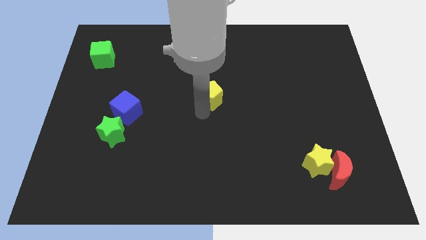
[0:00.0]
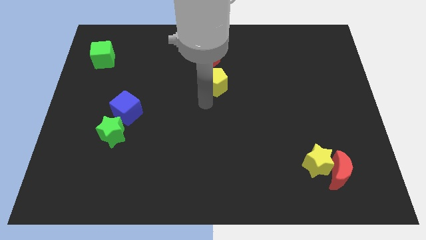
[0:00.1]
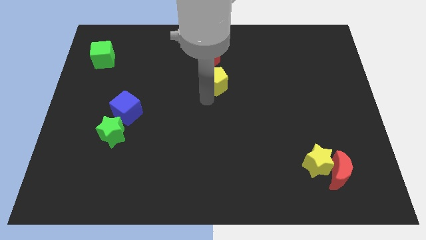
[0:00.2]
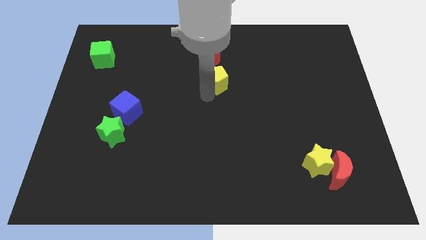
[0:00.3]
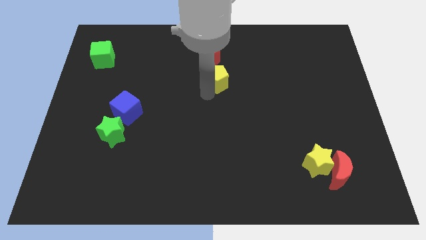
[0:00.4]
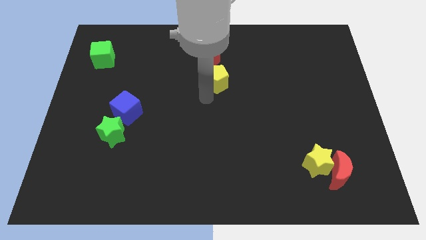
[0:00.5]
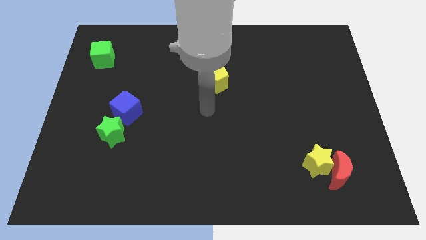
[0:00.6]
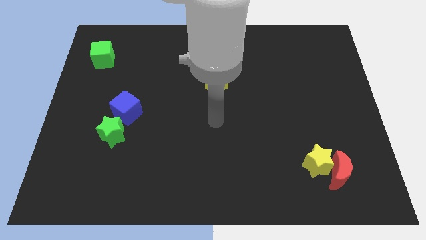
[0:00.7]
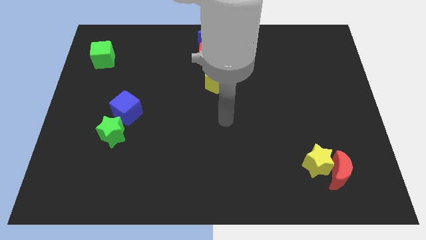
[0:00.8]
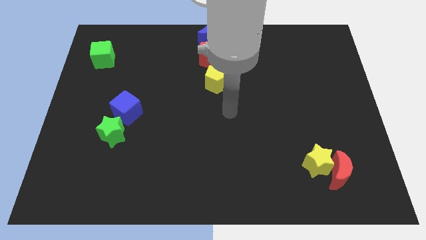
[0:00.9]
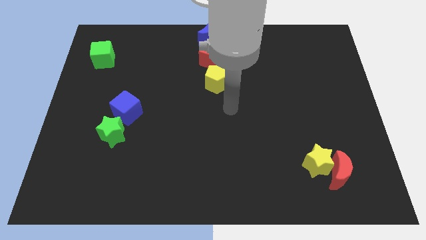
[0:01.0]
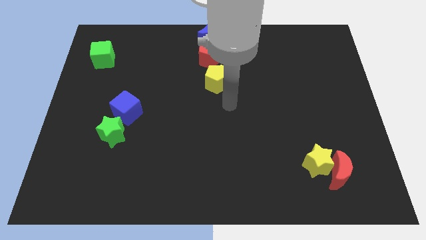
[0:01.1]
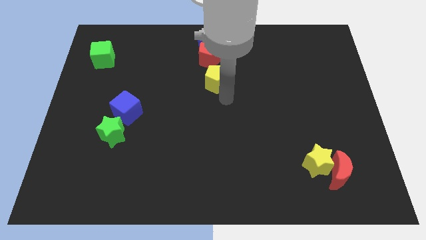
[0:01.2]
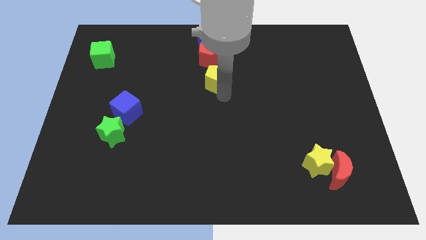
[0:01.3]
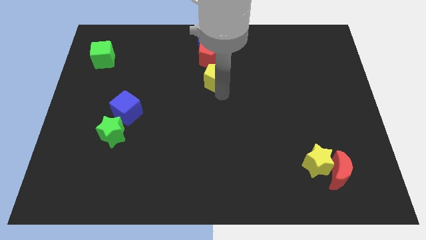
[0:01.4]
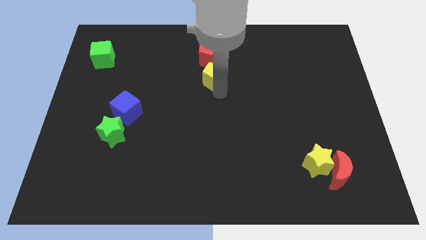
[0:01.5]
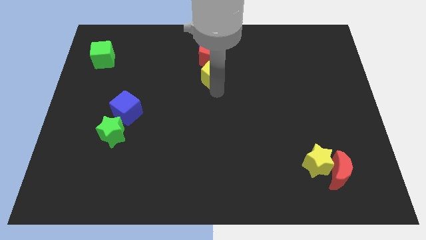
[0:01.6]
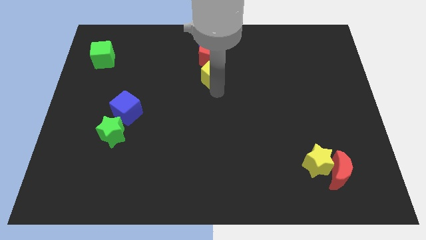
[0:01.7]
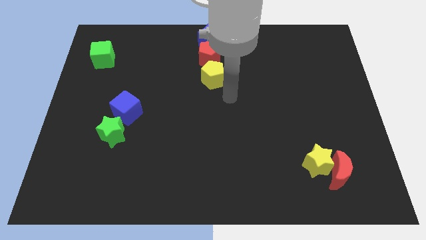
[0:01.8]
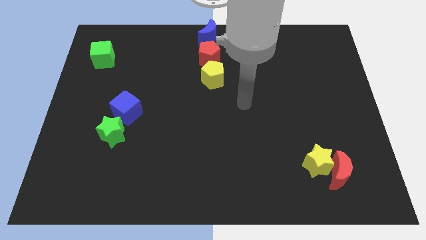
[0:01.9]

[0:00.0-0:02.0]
move the yellow pentagon below the red pentagon

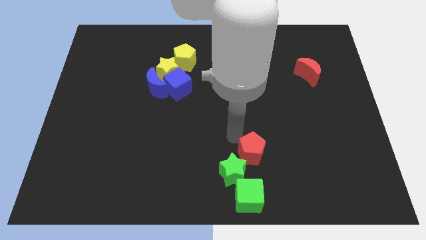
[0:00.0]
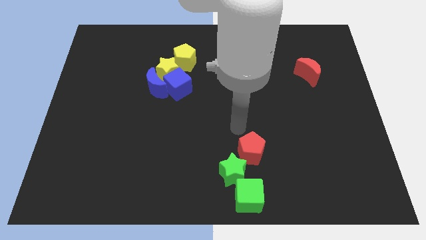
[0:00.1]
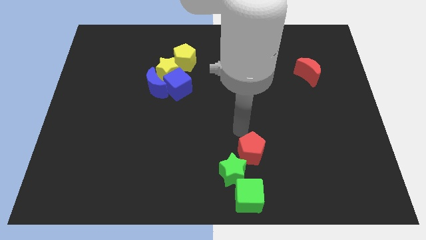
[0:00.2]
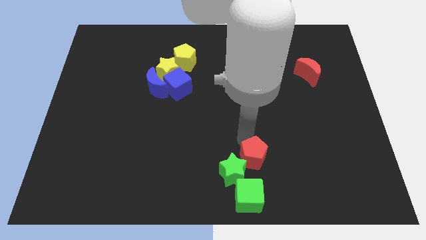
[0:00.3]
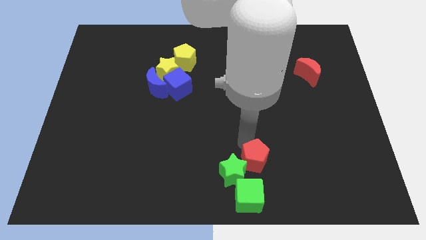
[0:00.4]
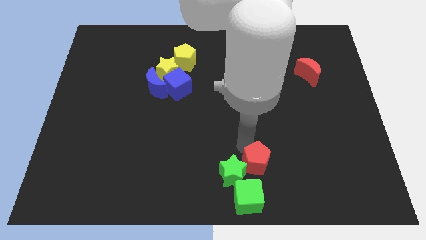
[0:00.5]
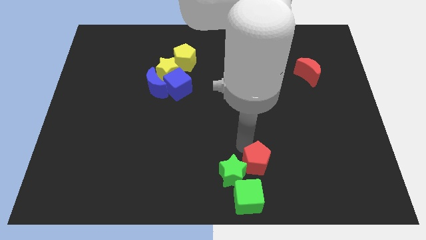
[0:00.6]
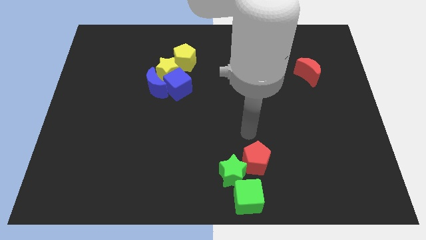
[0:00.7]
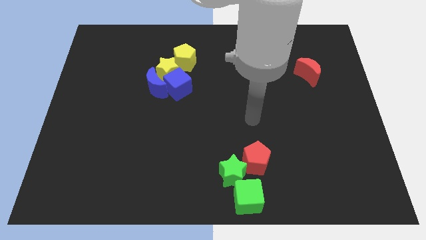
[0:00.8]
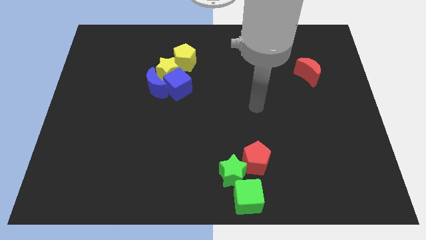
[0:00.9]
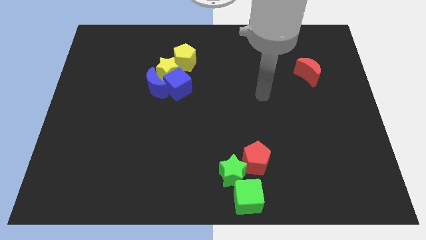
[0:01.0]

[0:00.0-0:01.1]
push the red pentagon into green star

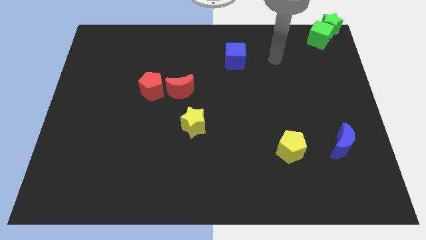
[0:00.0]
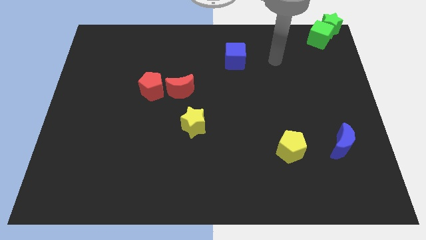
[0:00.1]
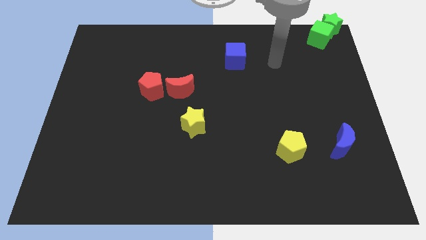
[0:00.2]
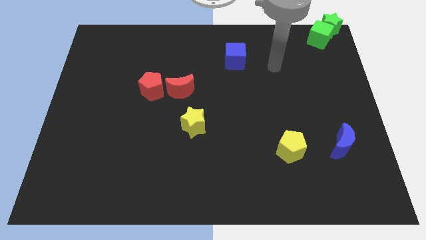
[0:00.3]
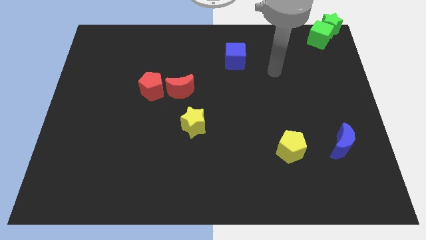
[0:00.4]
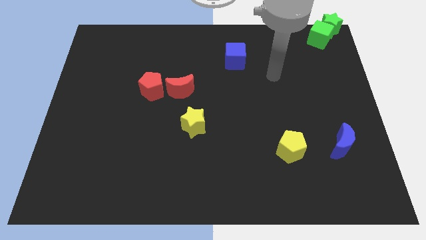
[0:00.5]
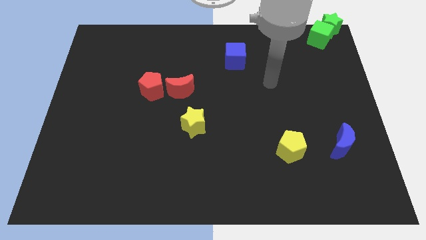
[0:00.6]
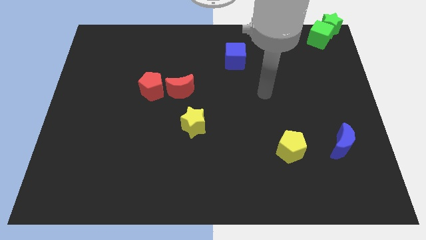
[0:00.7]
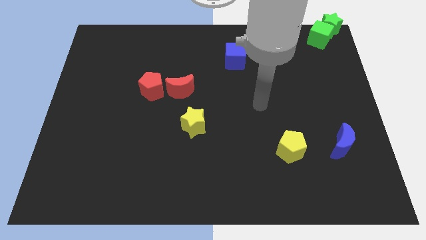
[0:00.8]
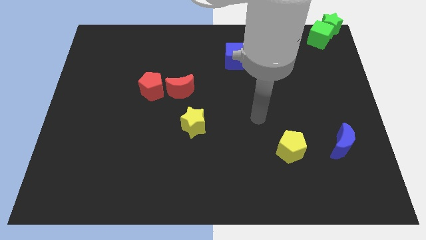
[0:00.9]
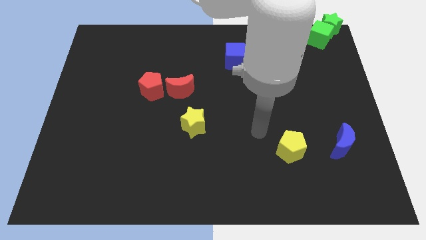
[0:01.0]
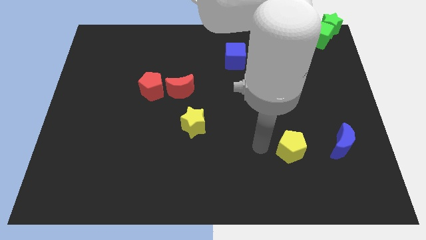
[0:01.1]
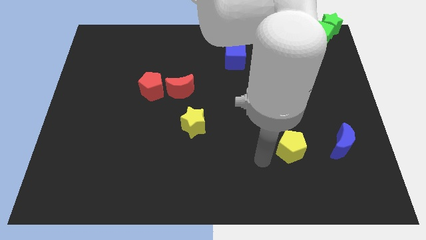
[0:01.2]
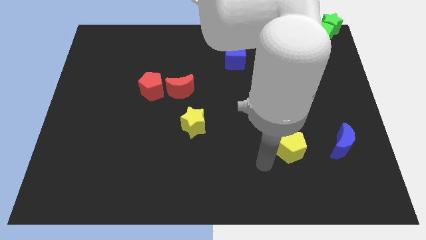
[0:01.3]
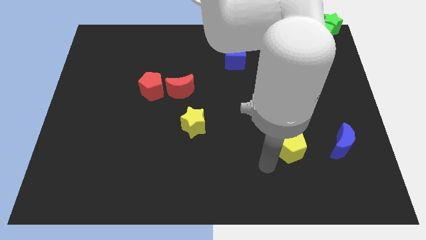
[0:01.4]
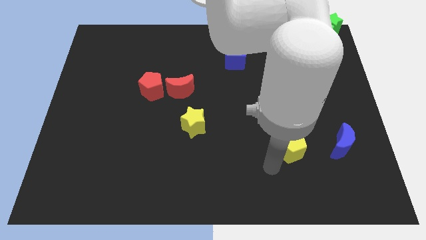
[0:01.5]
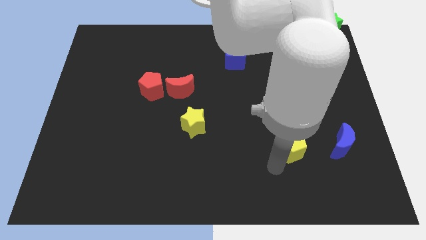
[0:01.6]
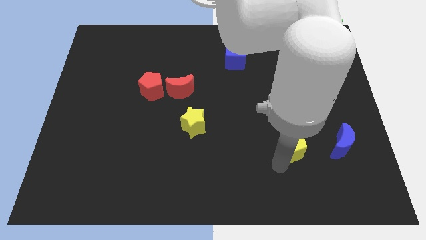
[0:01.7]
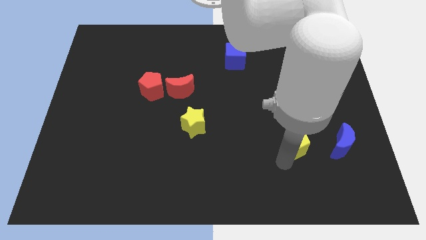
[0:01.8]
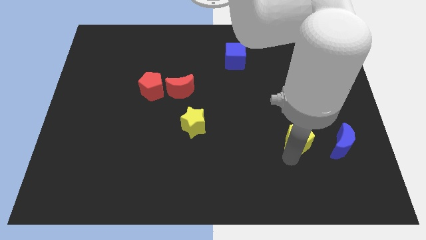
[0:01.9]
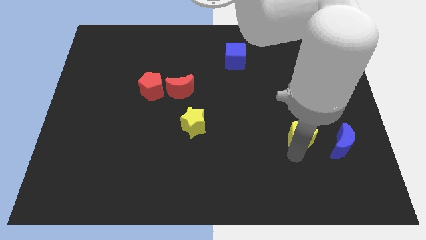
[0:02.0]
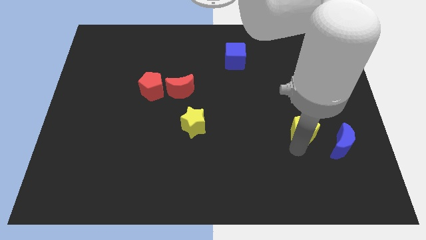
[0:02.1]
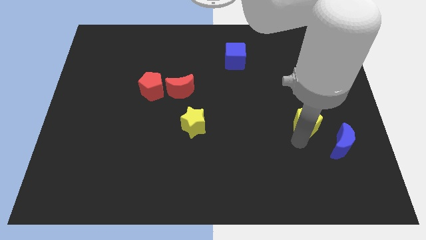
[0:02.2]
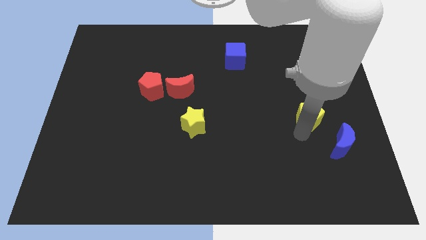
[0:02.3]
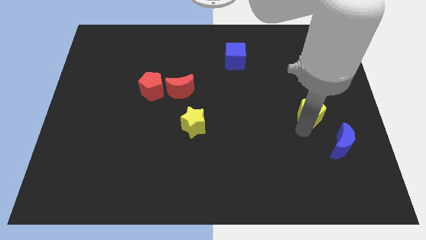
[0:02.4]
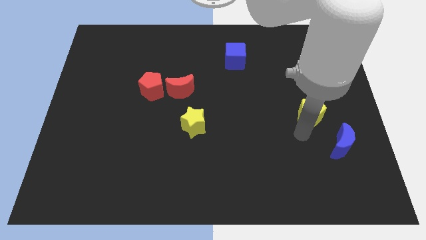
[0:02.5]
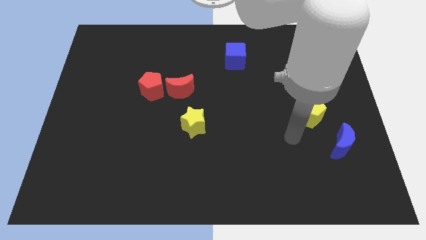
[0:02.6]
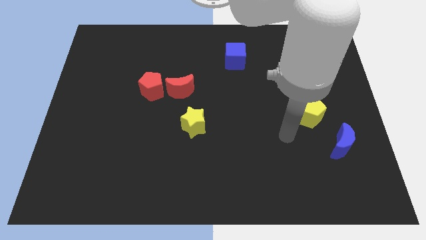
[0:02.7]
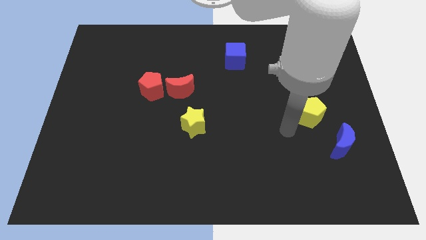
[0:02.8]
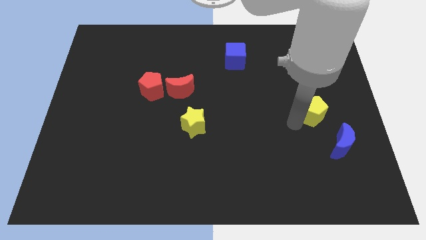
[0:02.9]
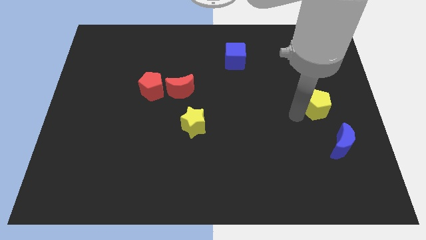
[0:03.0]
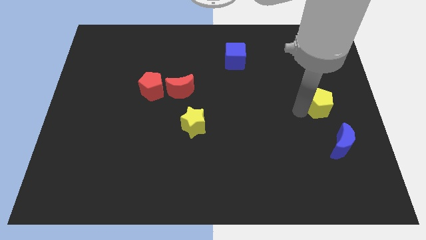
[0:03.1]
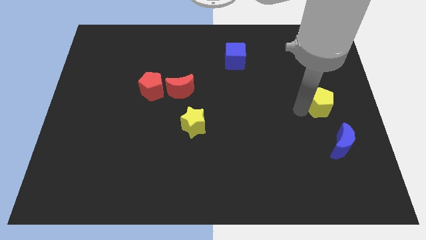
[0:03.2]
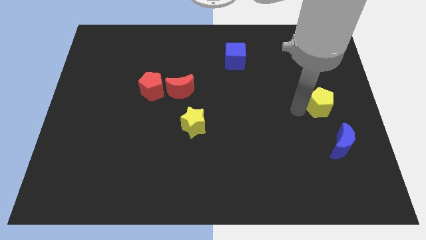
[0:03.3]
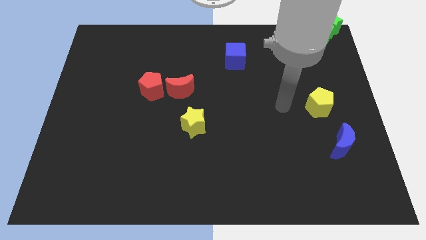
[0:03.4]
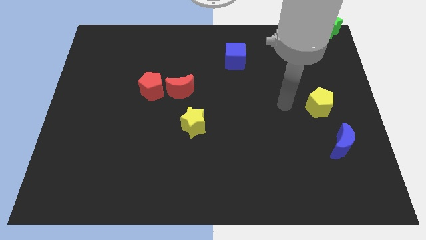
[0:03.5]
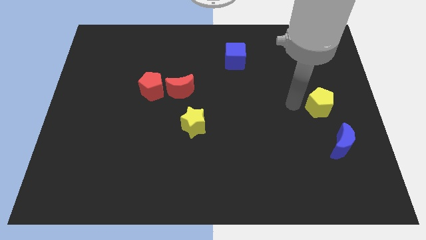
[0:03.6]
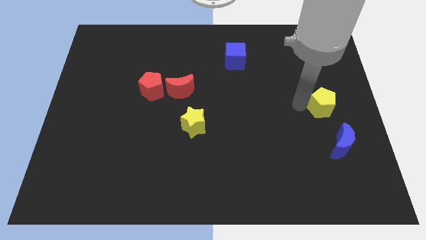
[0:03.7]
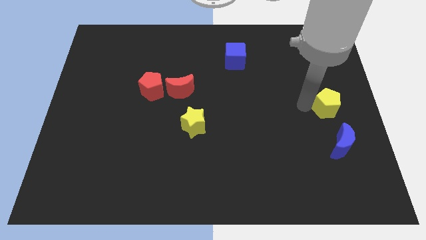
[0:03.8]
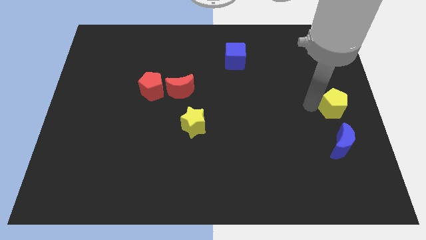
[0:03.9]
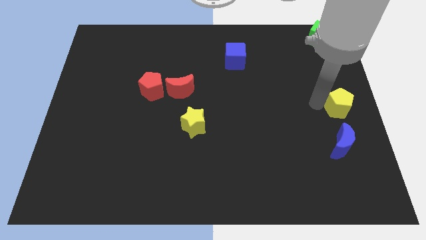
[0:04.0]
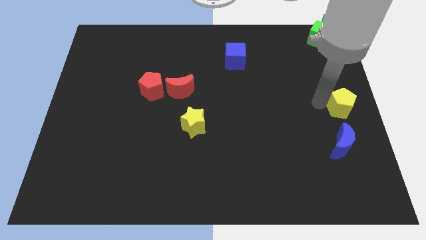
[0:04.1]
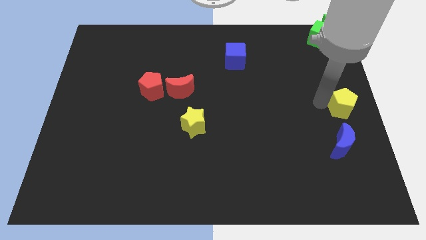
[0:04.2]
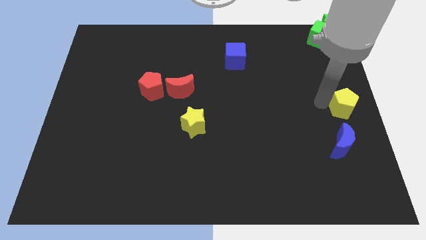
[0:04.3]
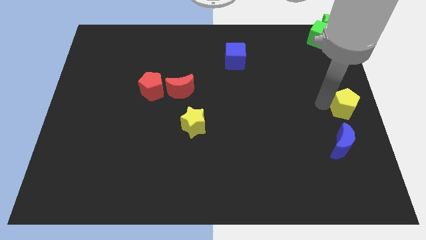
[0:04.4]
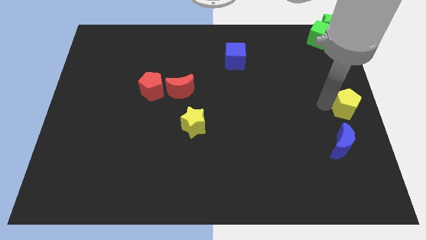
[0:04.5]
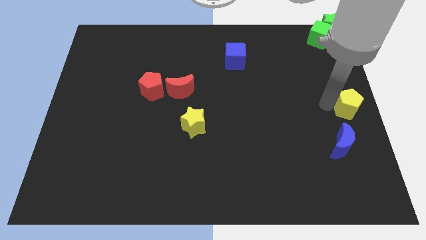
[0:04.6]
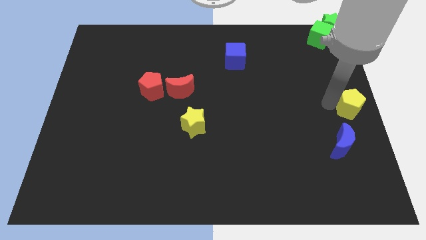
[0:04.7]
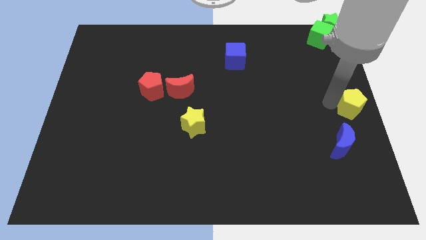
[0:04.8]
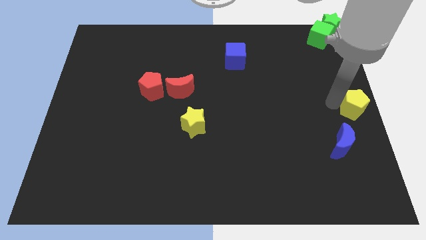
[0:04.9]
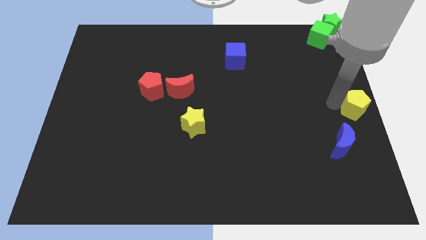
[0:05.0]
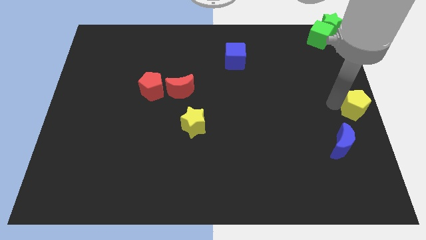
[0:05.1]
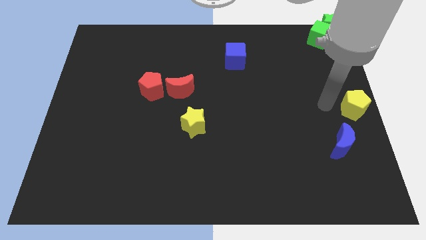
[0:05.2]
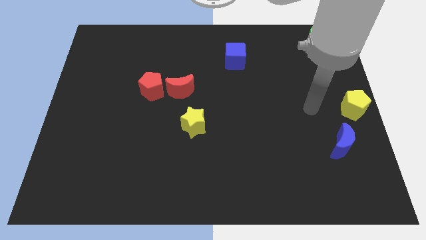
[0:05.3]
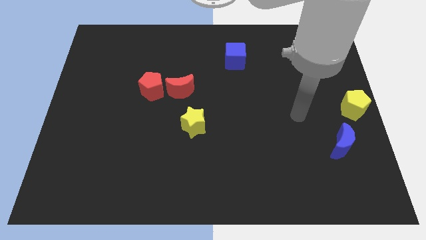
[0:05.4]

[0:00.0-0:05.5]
move the yellow pentagon to the right center

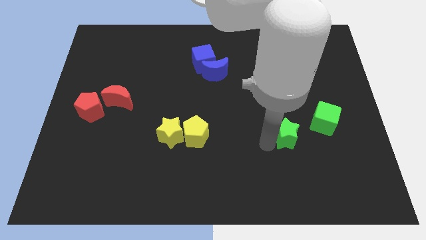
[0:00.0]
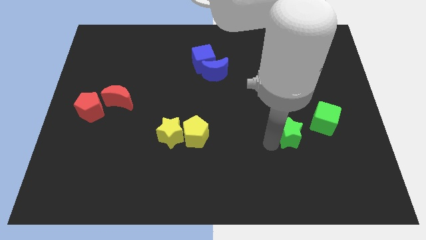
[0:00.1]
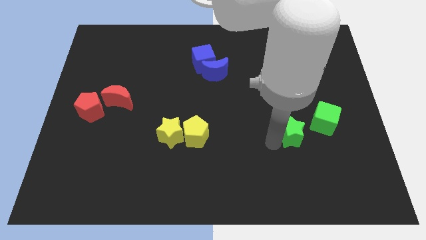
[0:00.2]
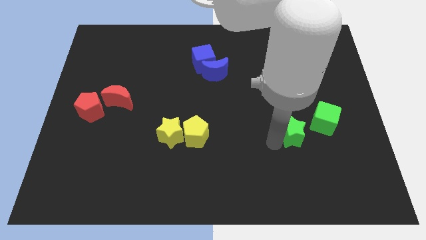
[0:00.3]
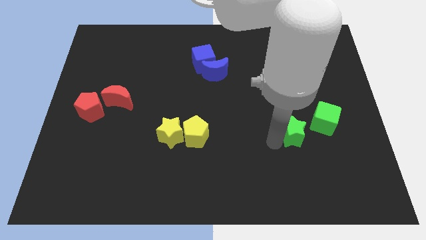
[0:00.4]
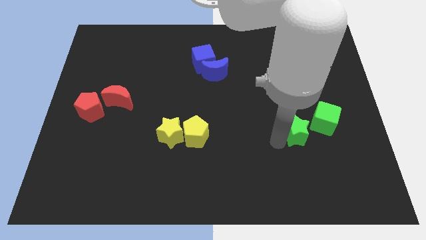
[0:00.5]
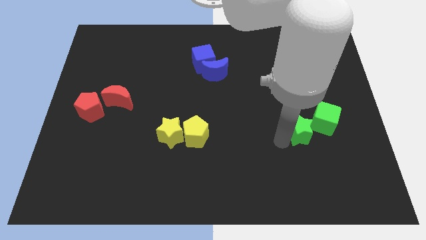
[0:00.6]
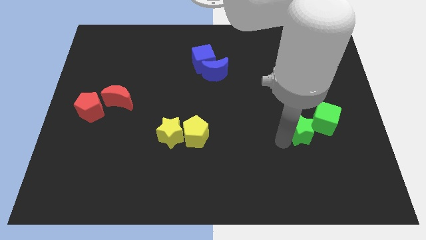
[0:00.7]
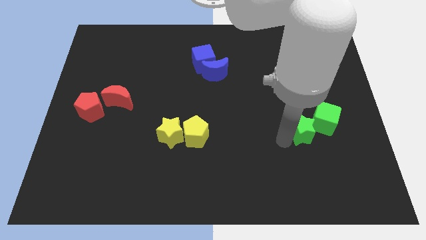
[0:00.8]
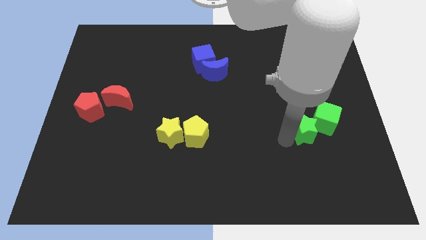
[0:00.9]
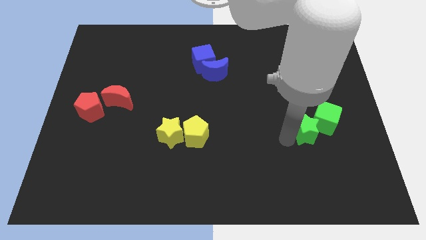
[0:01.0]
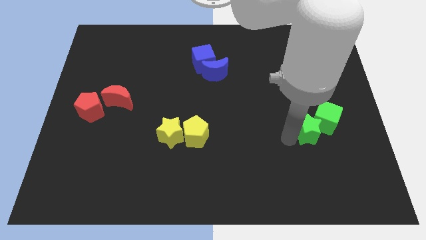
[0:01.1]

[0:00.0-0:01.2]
make the green star touch the bottom left of the green cube
